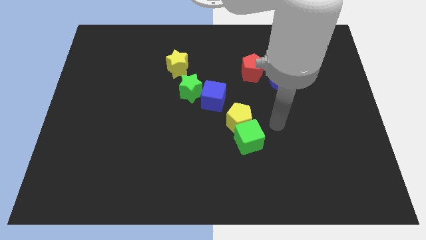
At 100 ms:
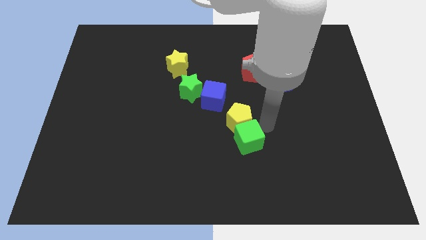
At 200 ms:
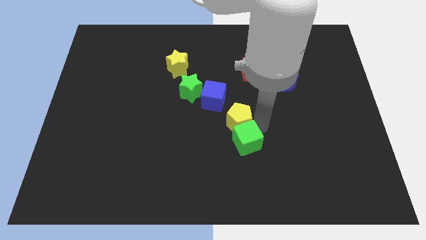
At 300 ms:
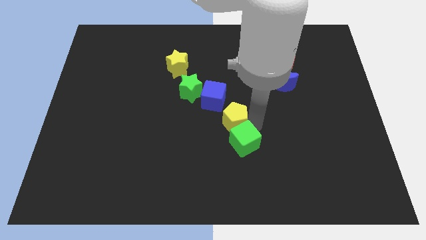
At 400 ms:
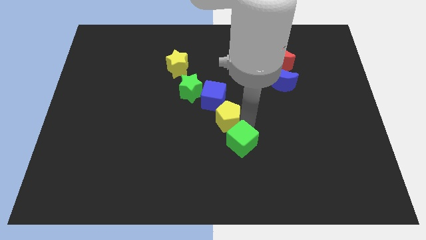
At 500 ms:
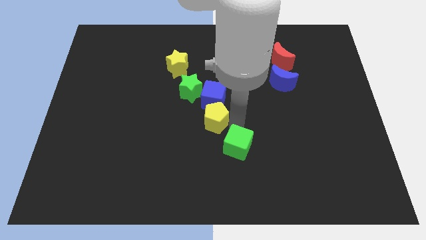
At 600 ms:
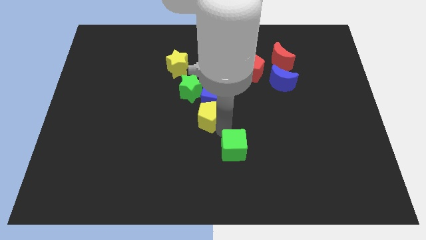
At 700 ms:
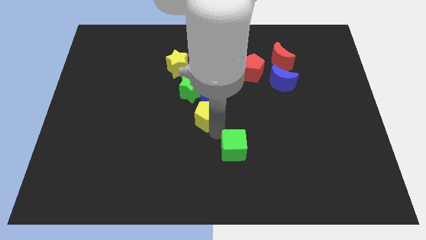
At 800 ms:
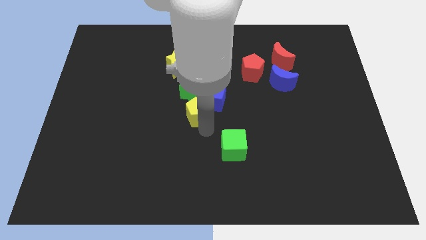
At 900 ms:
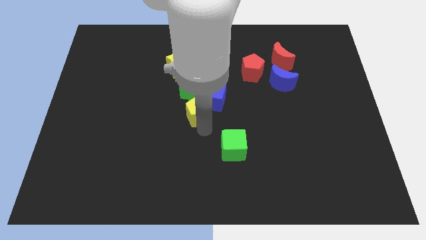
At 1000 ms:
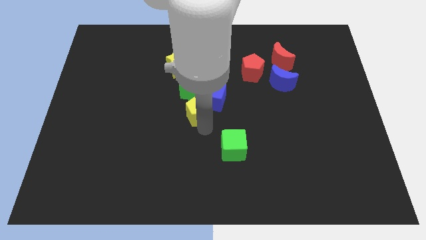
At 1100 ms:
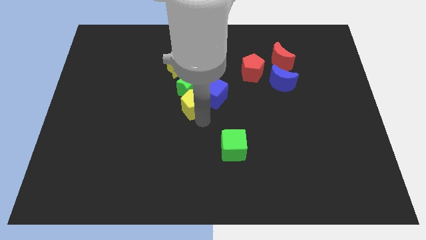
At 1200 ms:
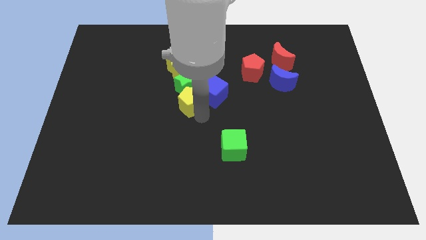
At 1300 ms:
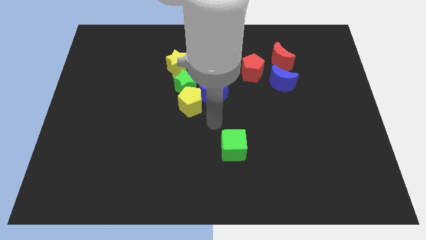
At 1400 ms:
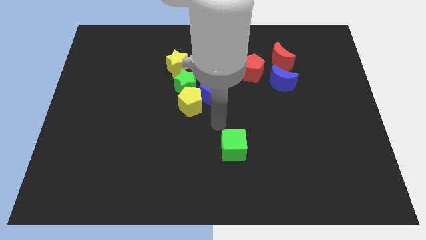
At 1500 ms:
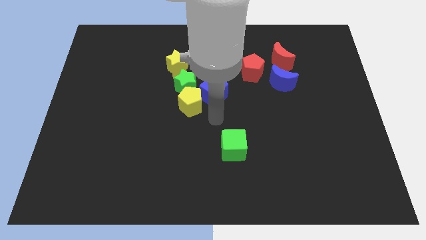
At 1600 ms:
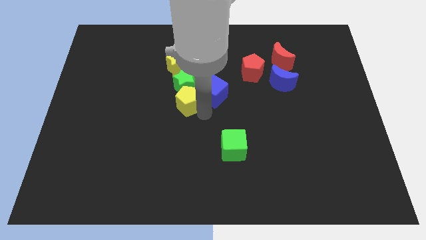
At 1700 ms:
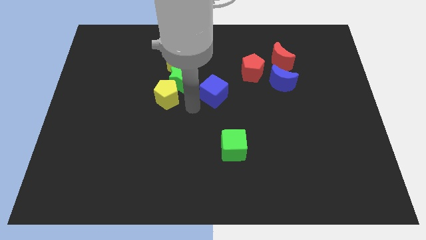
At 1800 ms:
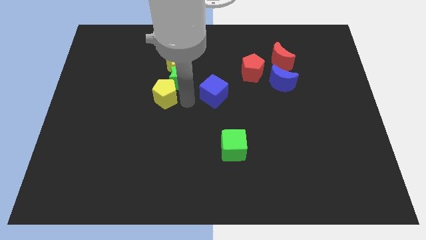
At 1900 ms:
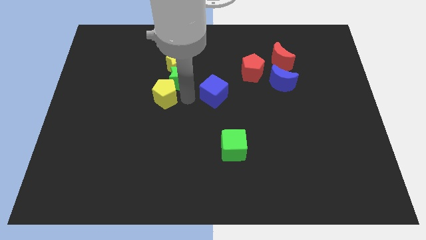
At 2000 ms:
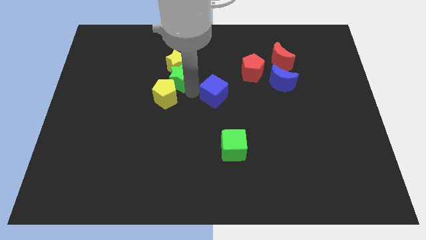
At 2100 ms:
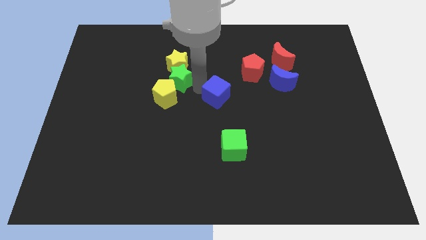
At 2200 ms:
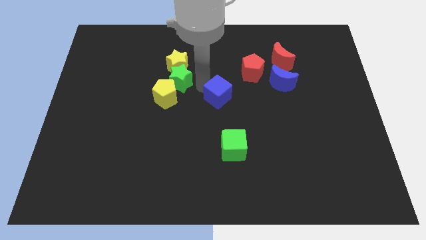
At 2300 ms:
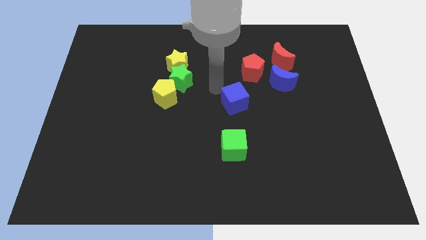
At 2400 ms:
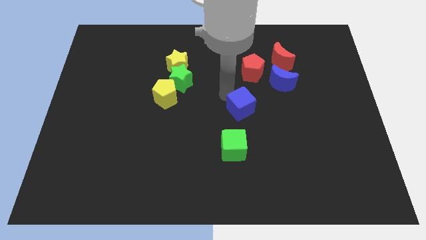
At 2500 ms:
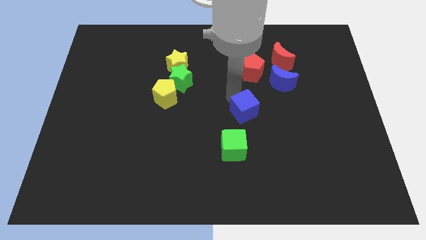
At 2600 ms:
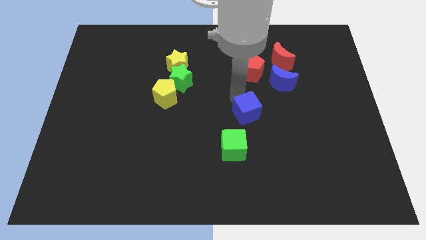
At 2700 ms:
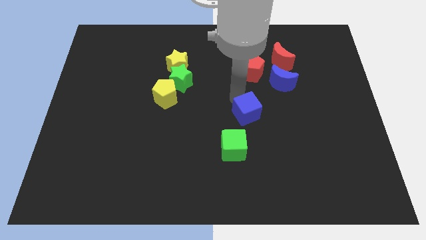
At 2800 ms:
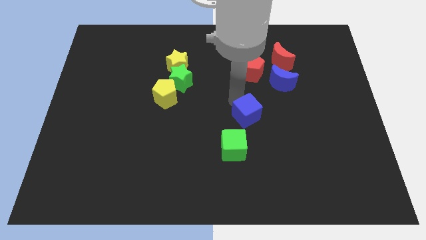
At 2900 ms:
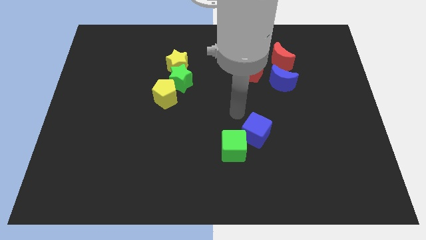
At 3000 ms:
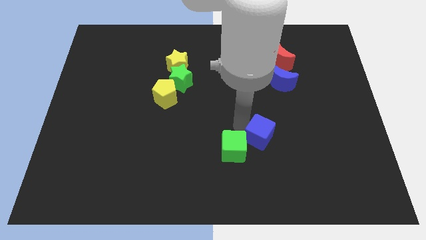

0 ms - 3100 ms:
move the blue cube slightly down

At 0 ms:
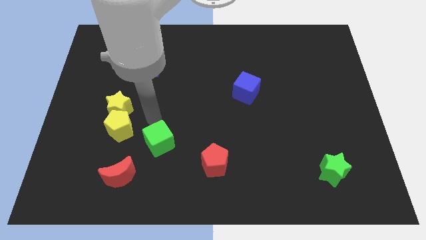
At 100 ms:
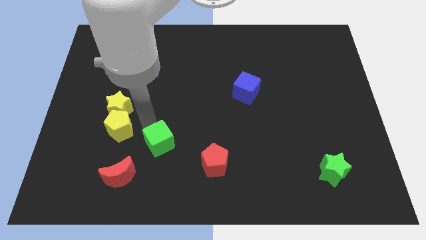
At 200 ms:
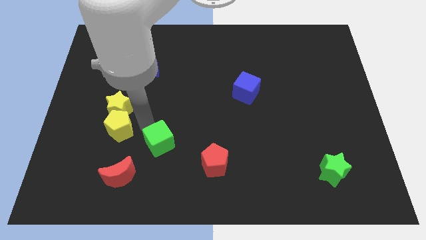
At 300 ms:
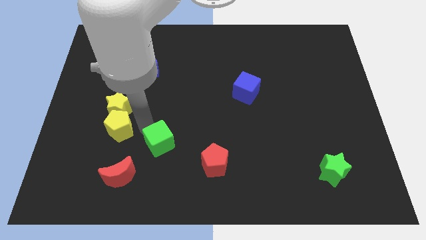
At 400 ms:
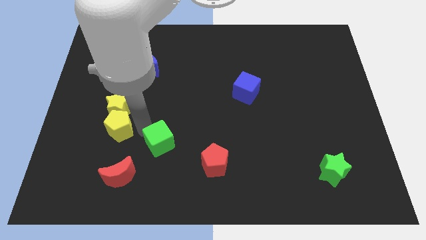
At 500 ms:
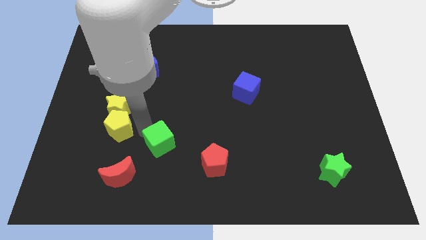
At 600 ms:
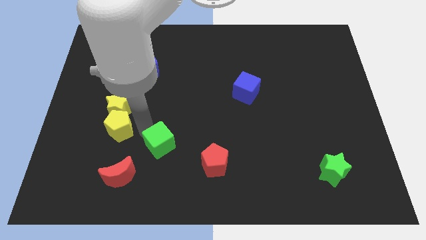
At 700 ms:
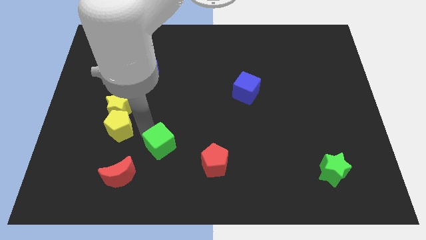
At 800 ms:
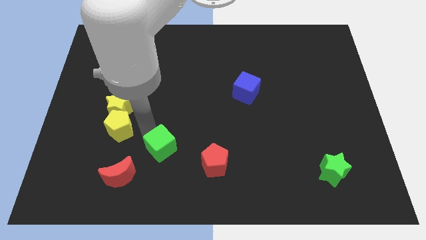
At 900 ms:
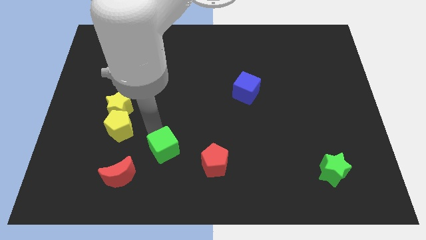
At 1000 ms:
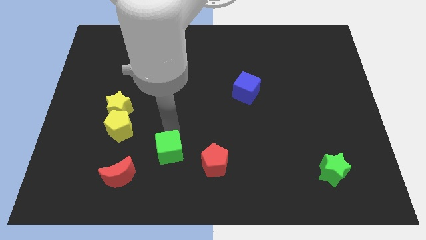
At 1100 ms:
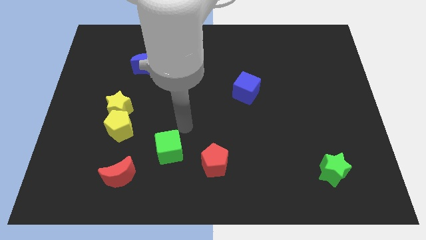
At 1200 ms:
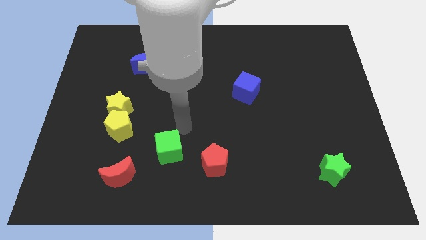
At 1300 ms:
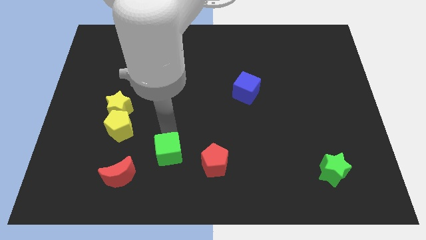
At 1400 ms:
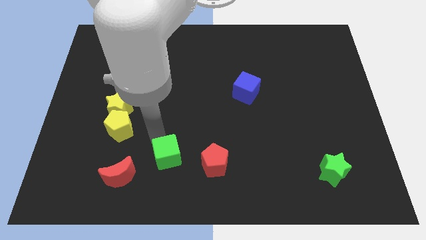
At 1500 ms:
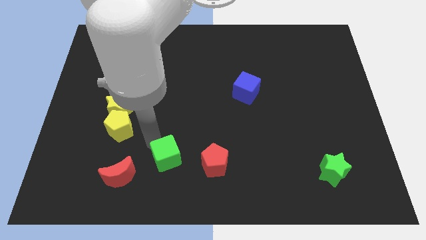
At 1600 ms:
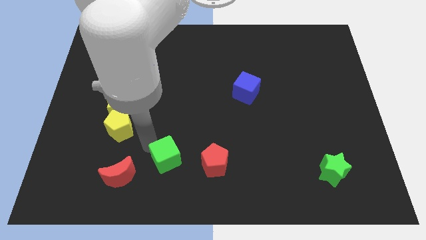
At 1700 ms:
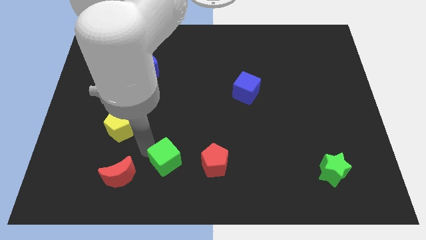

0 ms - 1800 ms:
push the green cube parallel left to the red pentagon

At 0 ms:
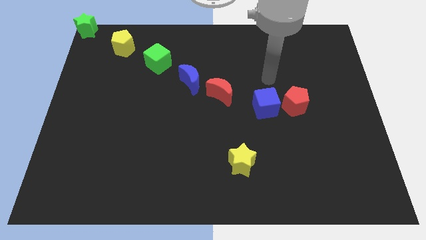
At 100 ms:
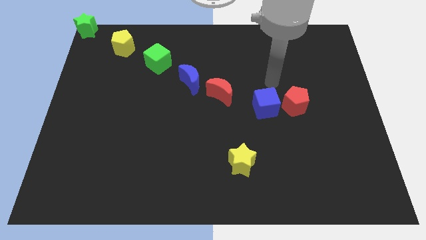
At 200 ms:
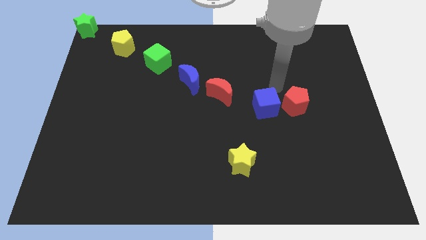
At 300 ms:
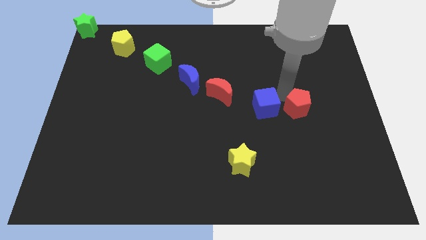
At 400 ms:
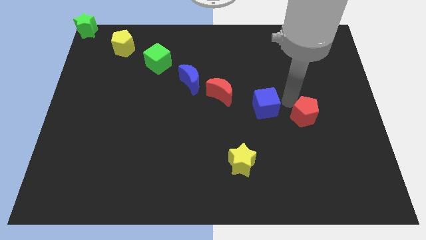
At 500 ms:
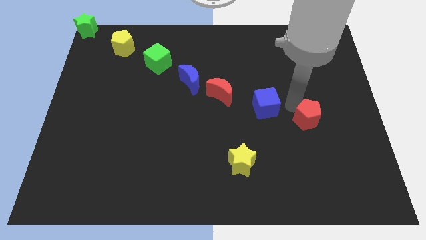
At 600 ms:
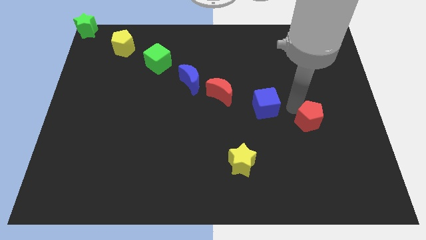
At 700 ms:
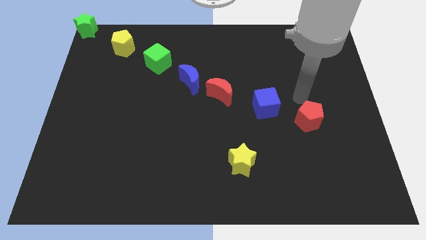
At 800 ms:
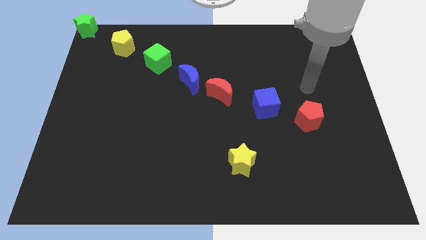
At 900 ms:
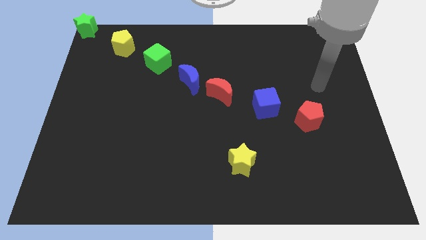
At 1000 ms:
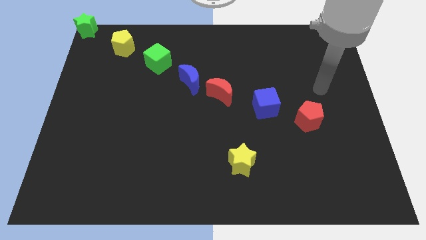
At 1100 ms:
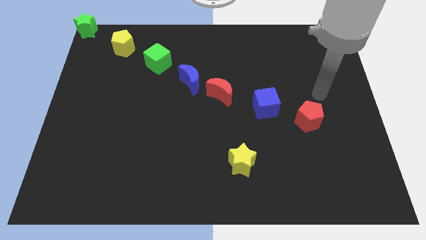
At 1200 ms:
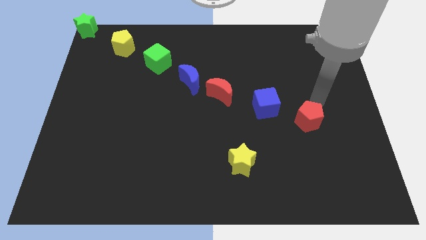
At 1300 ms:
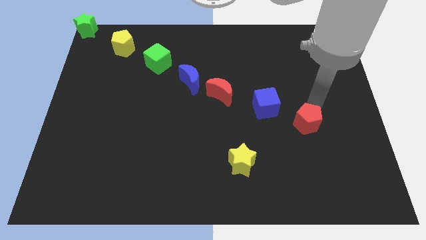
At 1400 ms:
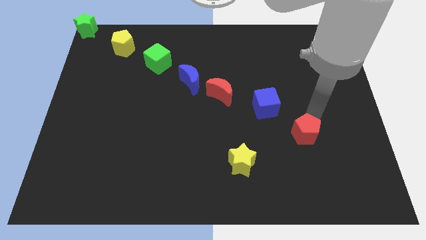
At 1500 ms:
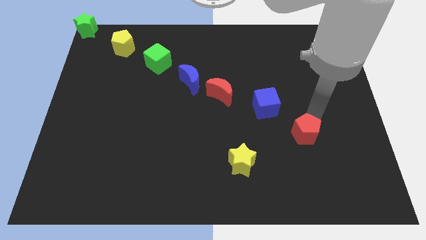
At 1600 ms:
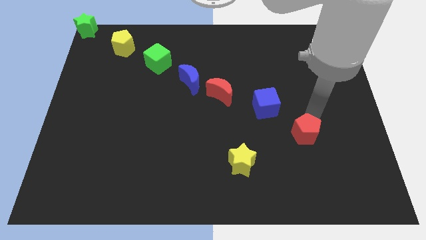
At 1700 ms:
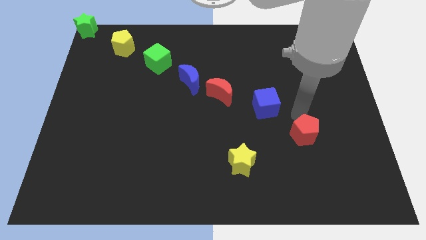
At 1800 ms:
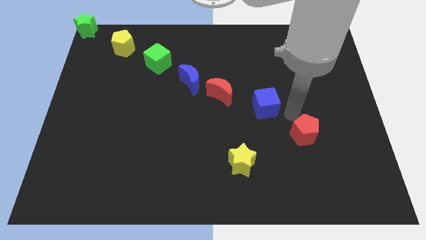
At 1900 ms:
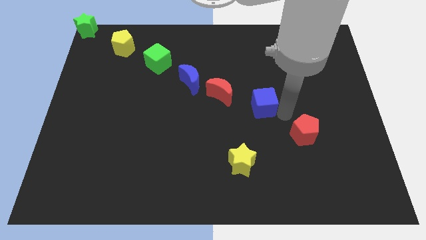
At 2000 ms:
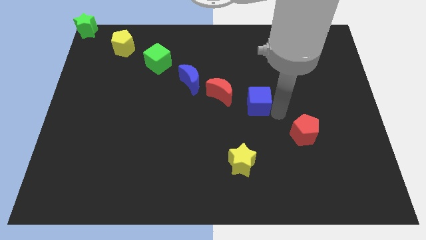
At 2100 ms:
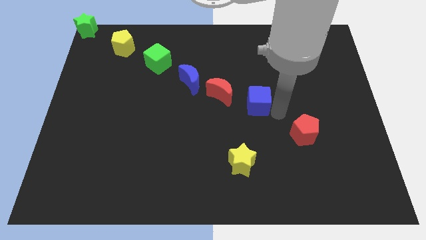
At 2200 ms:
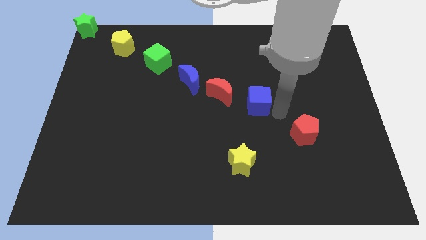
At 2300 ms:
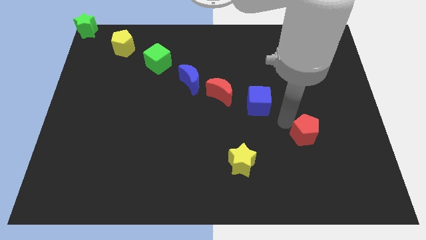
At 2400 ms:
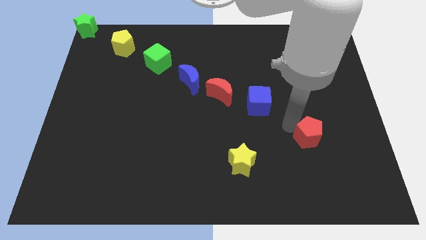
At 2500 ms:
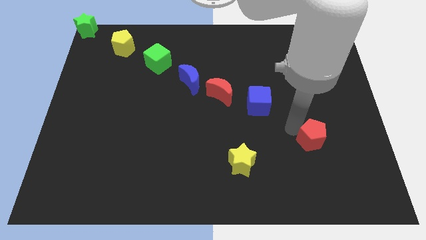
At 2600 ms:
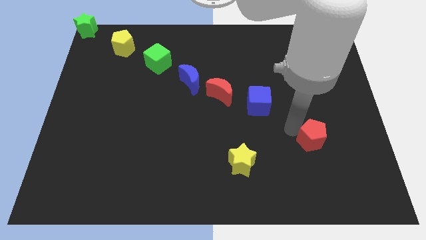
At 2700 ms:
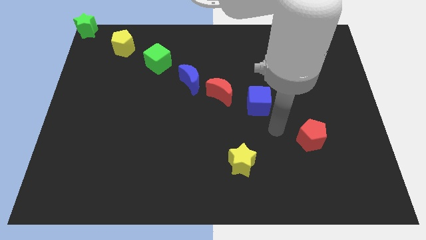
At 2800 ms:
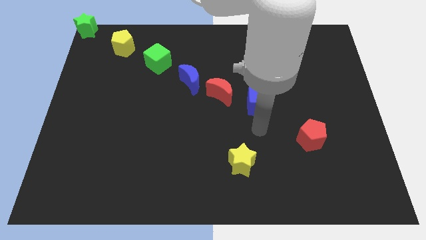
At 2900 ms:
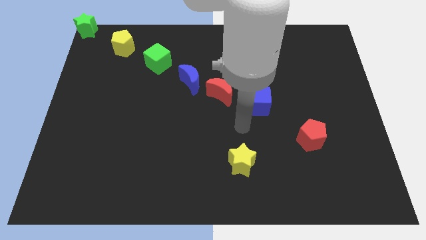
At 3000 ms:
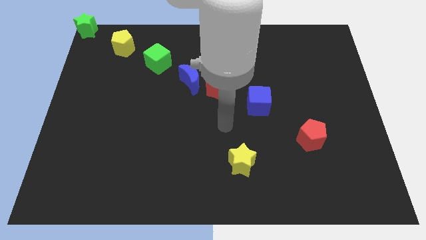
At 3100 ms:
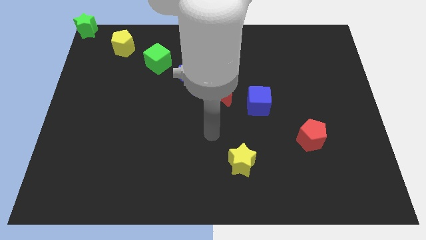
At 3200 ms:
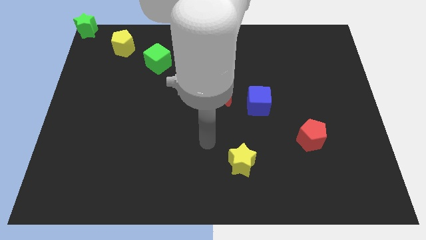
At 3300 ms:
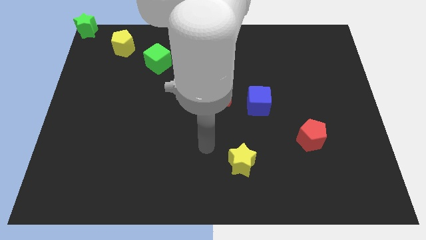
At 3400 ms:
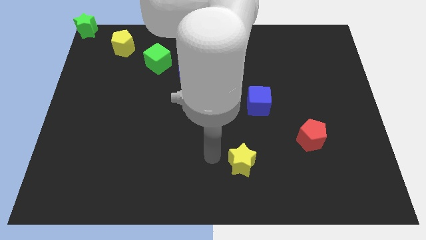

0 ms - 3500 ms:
move red pentagon slightly down

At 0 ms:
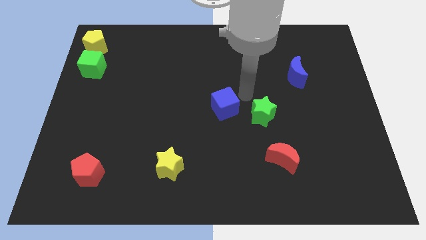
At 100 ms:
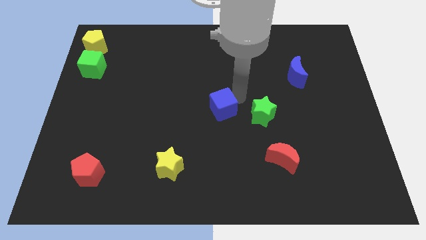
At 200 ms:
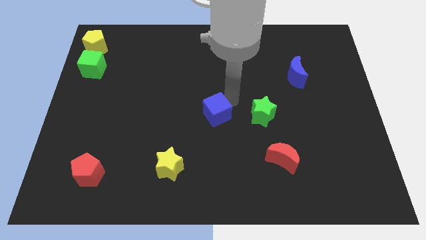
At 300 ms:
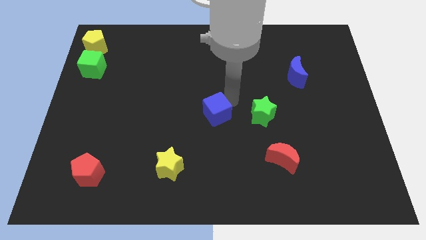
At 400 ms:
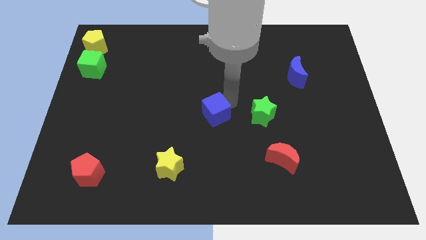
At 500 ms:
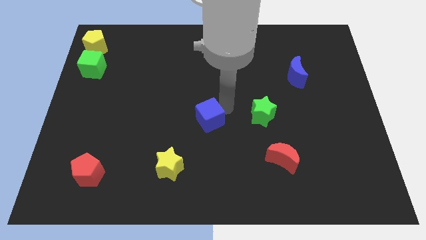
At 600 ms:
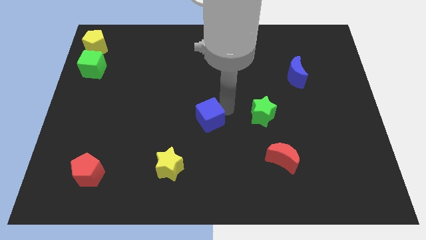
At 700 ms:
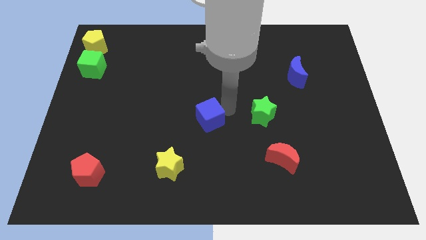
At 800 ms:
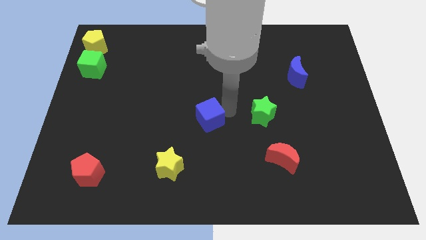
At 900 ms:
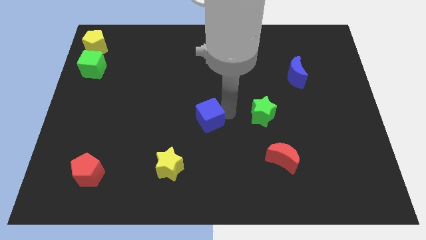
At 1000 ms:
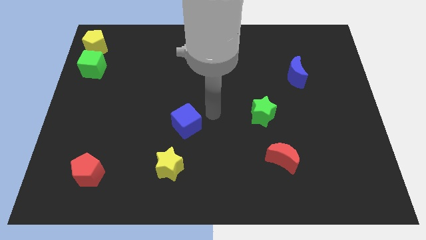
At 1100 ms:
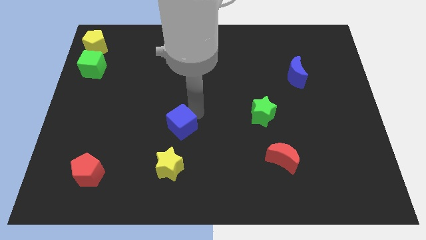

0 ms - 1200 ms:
place the blue cube vertically above the yellow star
